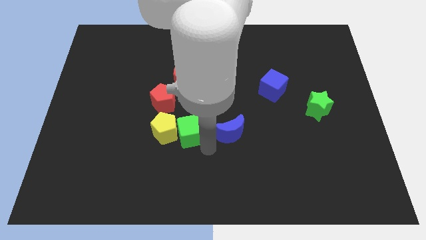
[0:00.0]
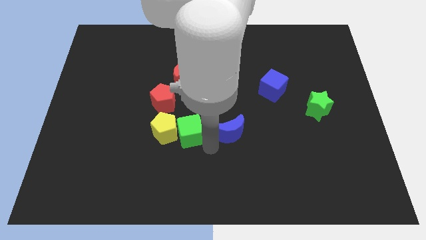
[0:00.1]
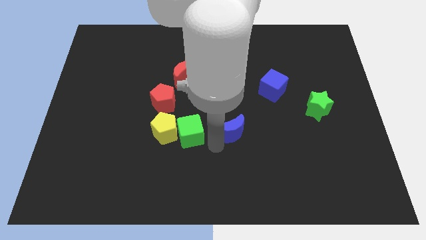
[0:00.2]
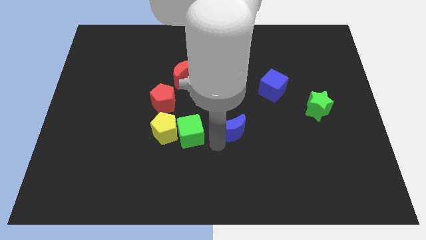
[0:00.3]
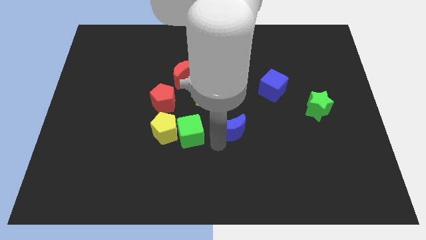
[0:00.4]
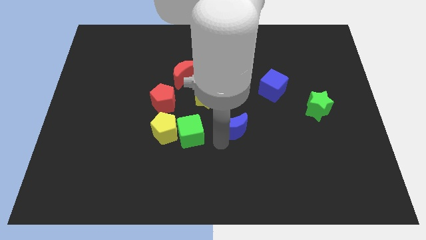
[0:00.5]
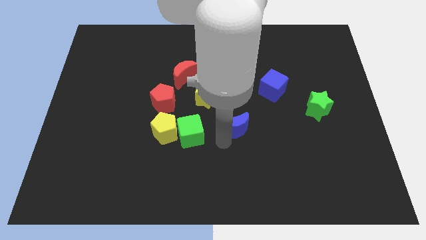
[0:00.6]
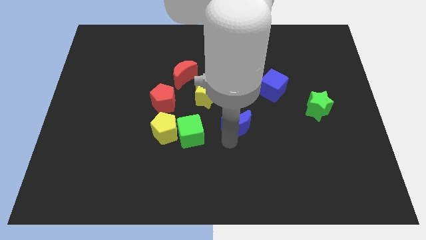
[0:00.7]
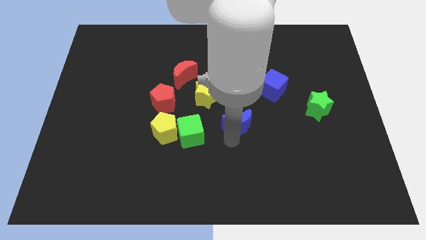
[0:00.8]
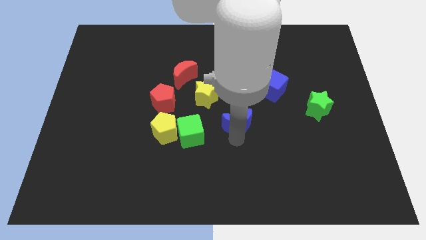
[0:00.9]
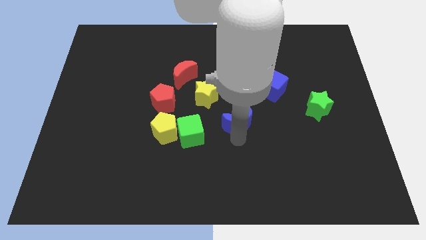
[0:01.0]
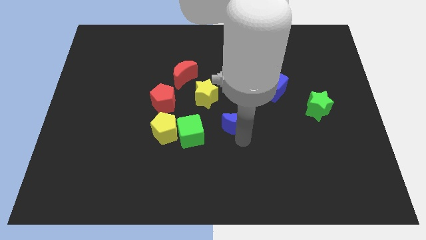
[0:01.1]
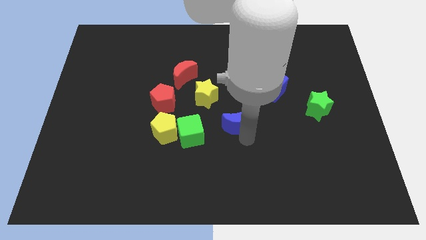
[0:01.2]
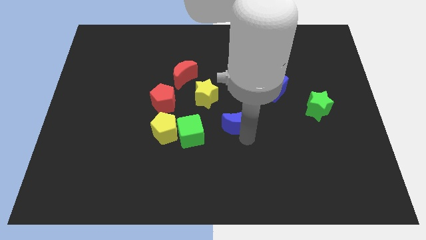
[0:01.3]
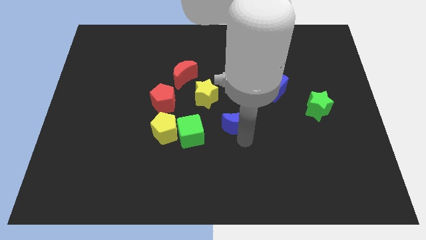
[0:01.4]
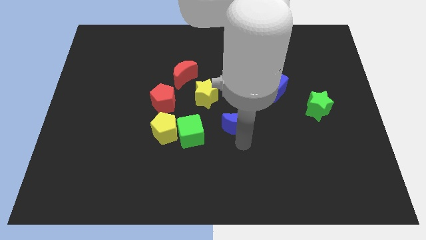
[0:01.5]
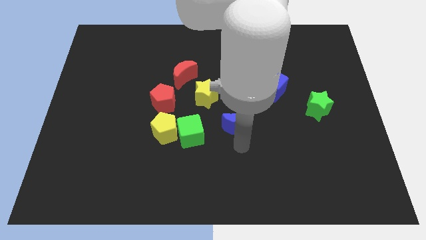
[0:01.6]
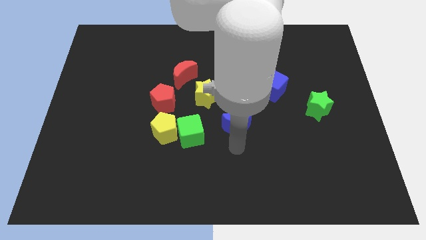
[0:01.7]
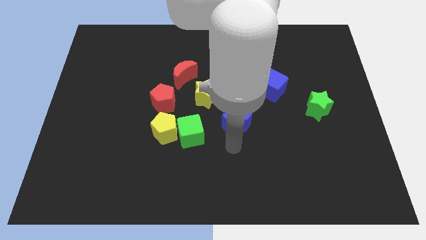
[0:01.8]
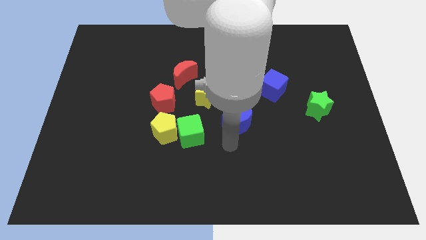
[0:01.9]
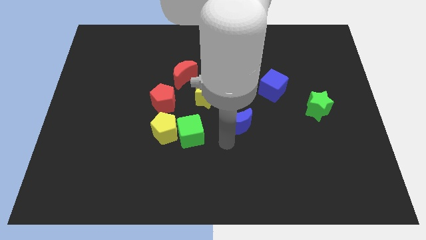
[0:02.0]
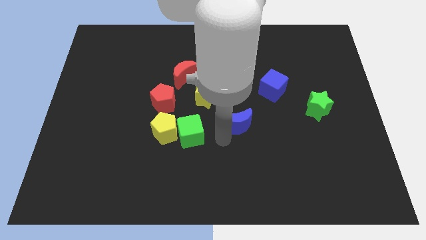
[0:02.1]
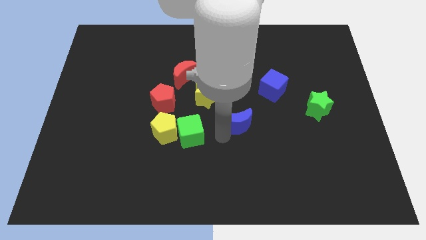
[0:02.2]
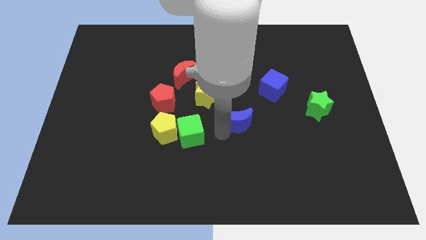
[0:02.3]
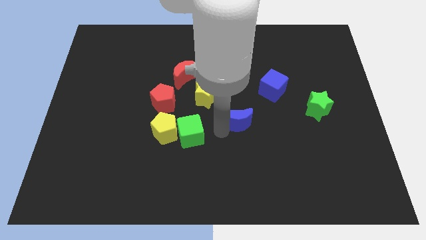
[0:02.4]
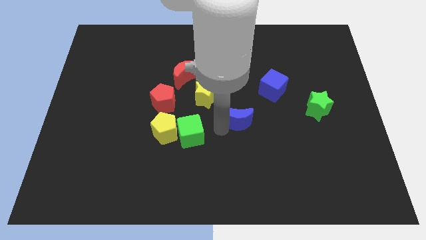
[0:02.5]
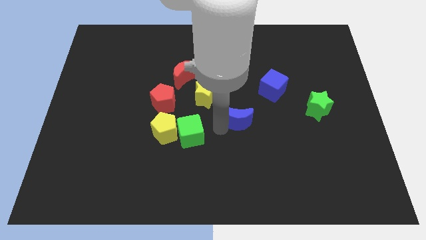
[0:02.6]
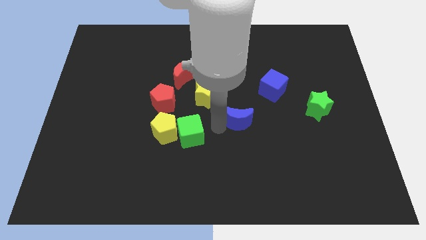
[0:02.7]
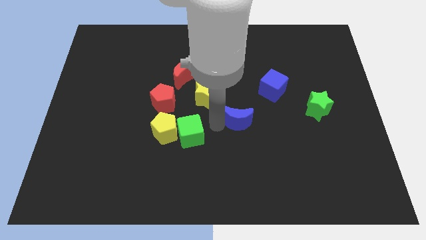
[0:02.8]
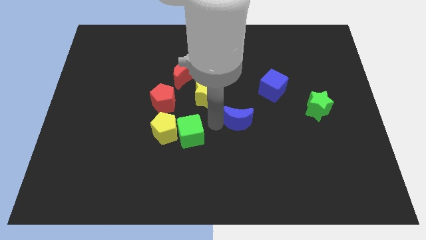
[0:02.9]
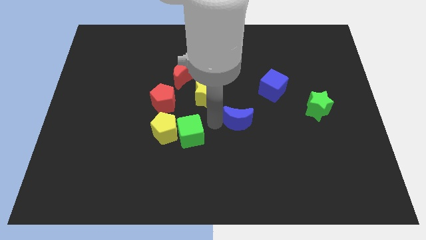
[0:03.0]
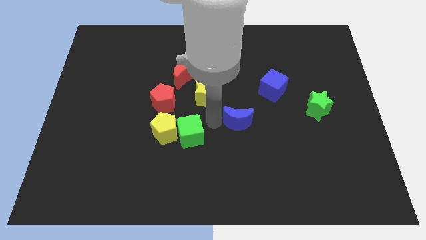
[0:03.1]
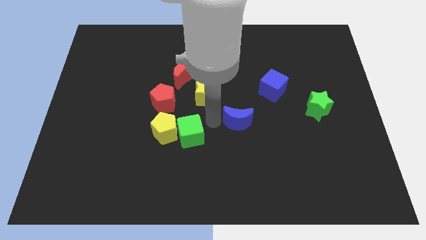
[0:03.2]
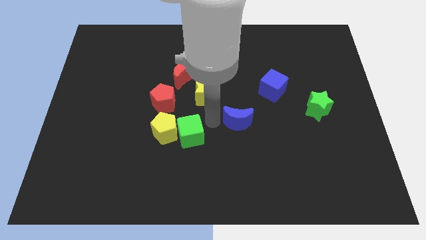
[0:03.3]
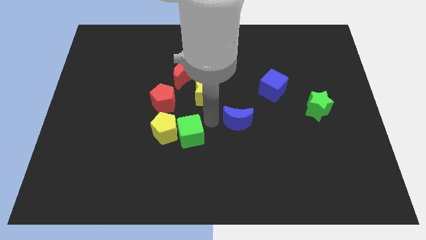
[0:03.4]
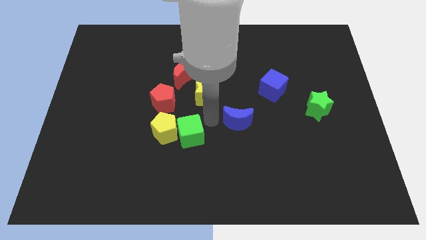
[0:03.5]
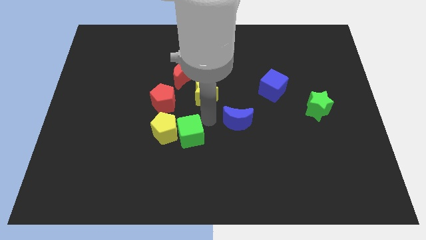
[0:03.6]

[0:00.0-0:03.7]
move blue moon right below the yellow star

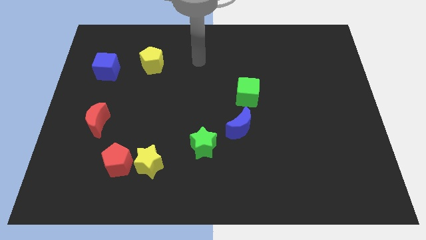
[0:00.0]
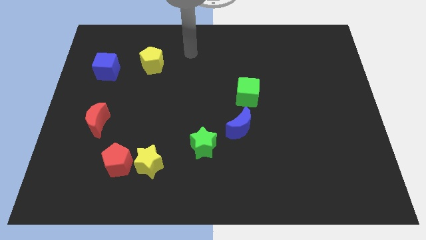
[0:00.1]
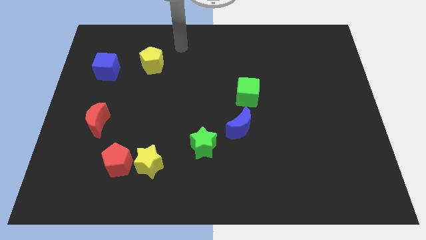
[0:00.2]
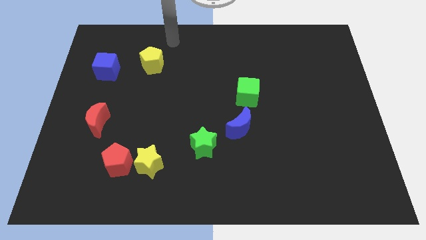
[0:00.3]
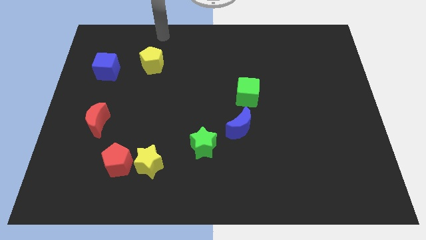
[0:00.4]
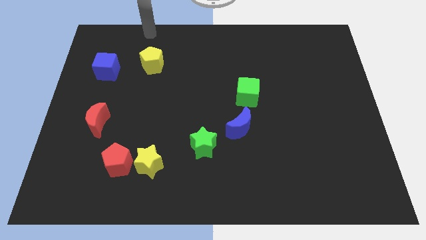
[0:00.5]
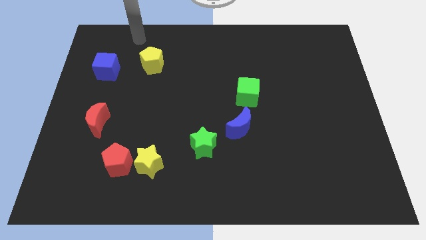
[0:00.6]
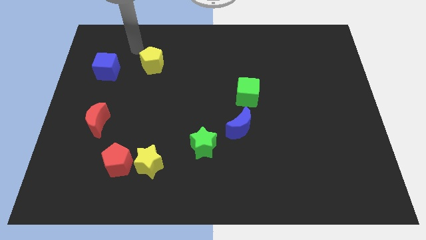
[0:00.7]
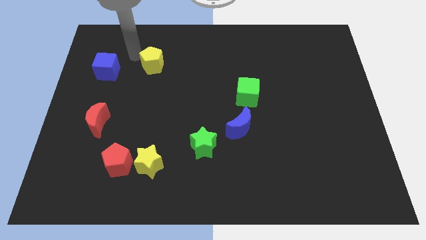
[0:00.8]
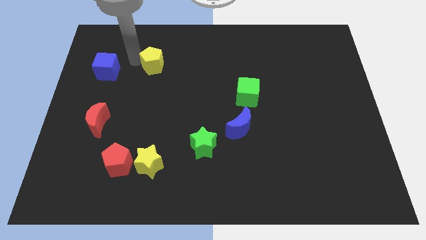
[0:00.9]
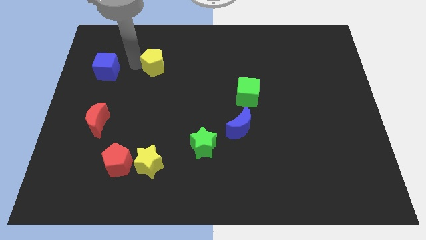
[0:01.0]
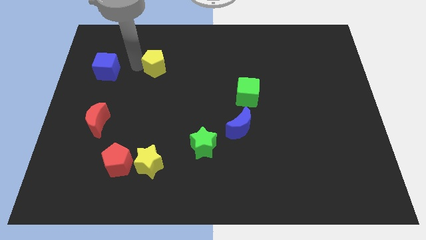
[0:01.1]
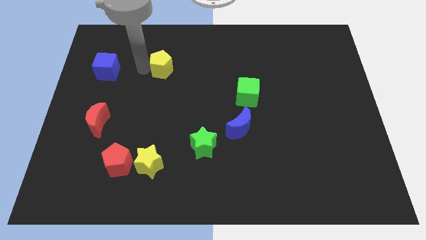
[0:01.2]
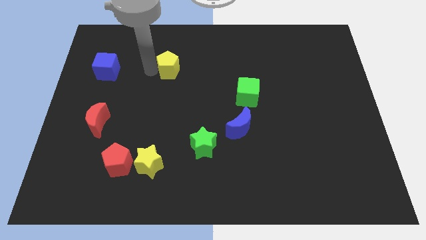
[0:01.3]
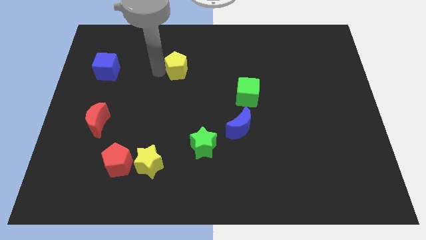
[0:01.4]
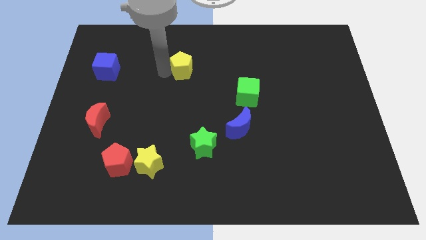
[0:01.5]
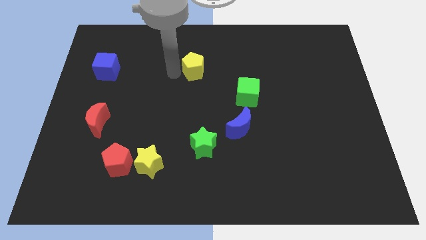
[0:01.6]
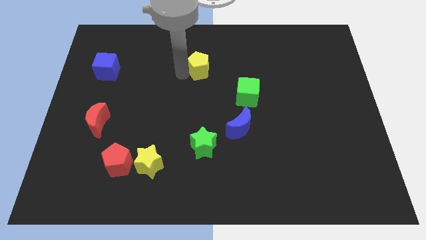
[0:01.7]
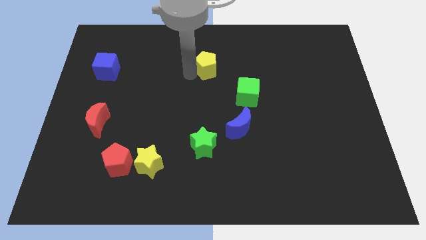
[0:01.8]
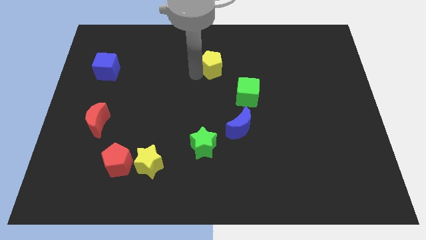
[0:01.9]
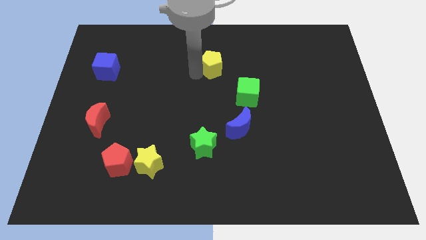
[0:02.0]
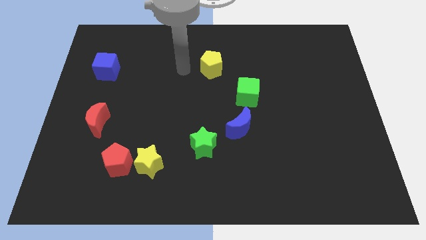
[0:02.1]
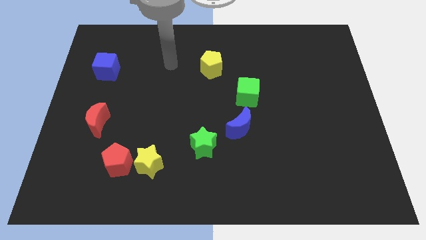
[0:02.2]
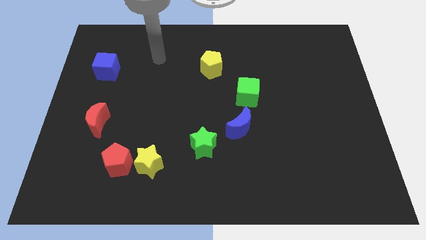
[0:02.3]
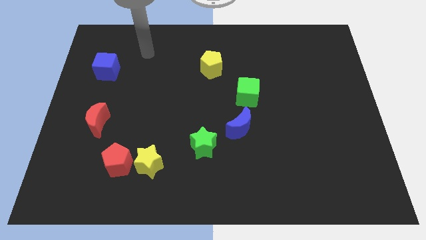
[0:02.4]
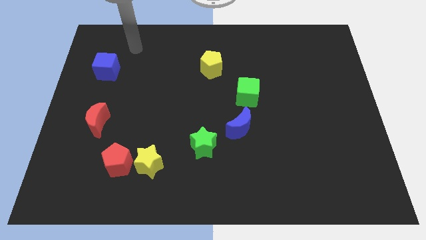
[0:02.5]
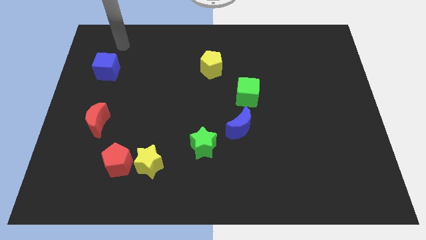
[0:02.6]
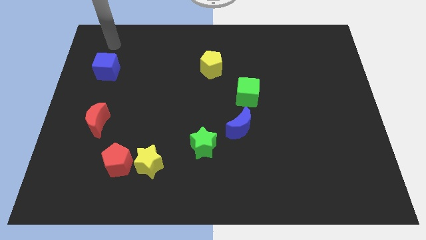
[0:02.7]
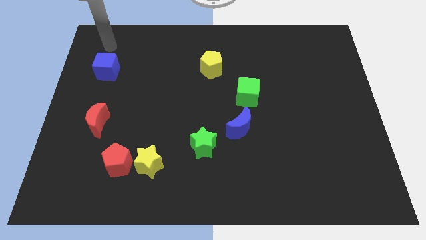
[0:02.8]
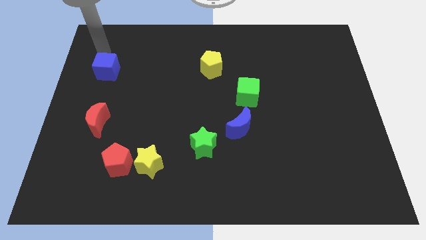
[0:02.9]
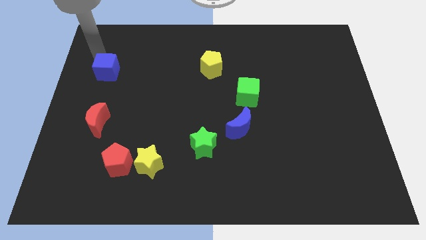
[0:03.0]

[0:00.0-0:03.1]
place the arm above the blue cube

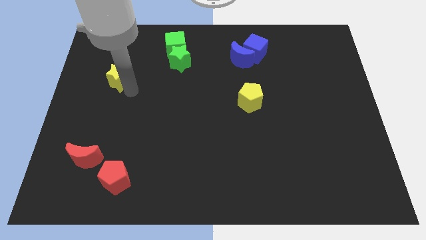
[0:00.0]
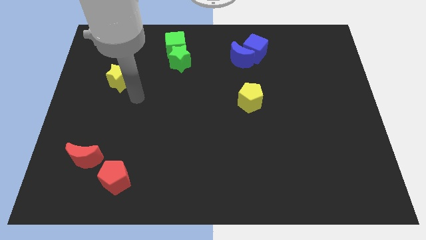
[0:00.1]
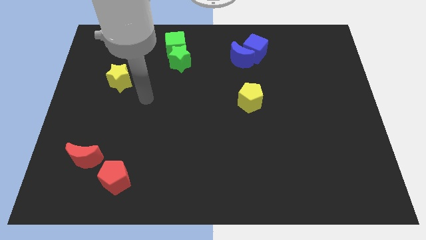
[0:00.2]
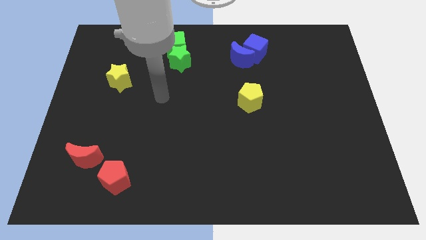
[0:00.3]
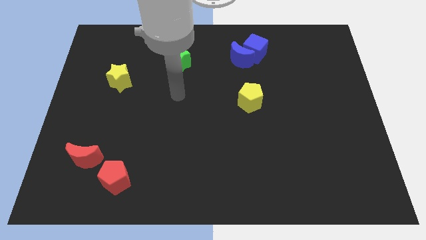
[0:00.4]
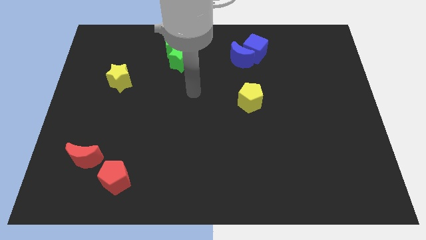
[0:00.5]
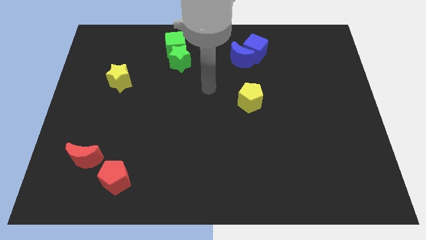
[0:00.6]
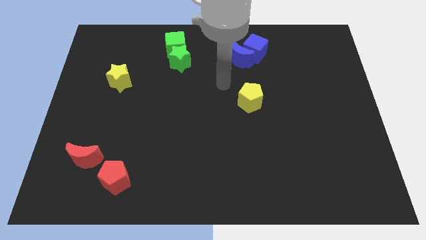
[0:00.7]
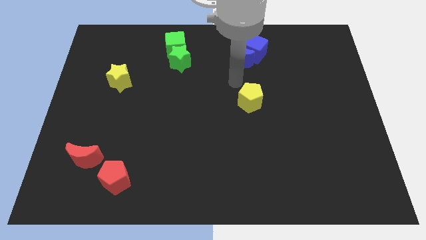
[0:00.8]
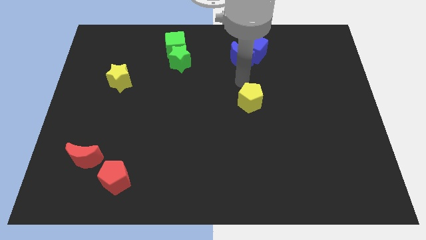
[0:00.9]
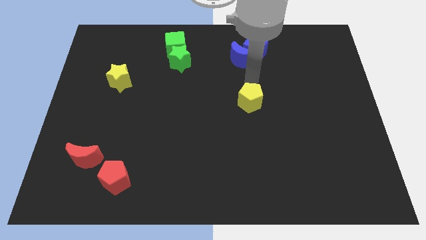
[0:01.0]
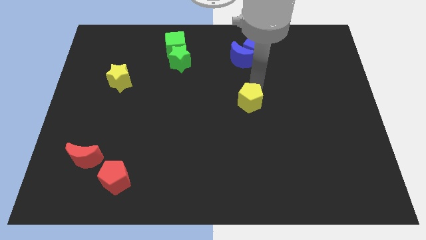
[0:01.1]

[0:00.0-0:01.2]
place your arm to the top of yellow pentagon

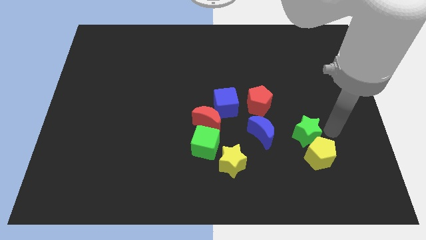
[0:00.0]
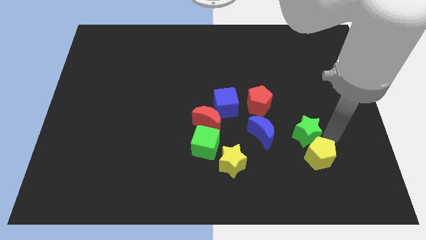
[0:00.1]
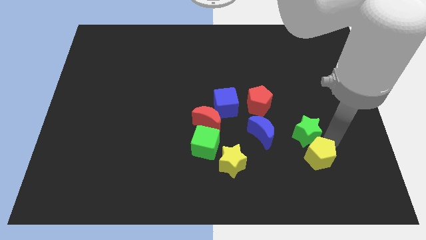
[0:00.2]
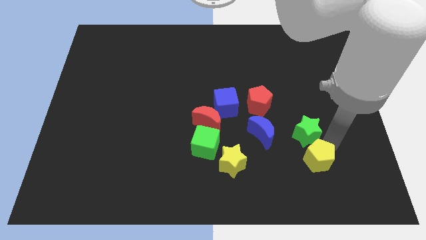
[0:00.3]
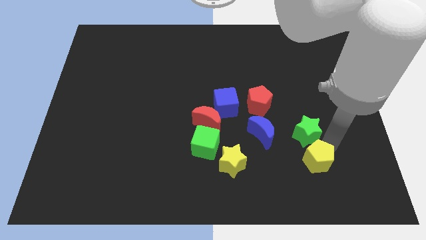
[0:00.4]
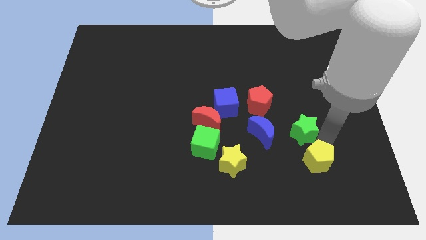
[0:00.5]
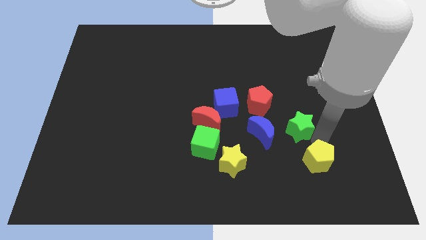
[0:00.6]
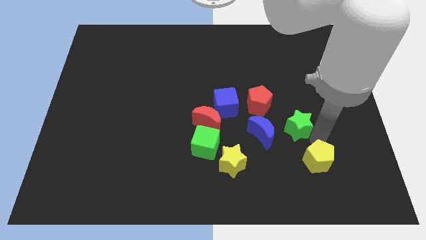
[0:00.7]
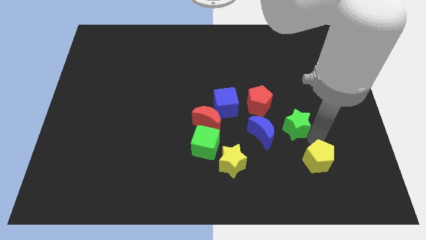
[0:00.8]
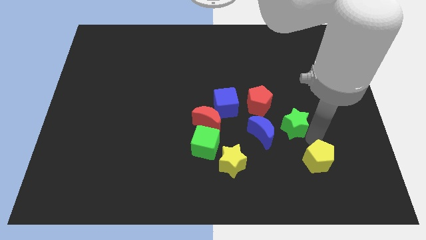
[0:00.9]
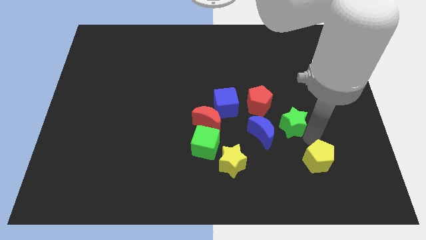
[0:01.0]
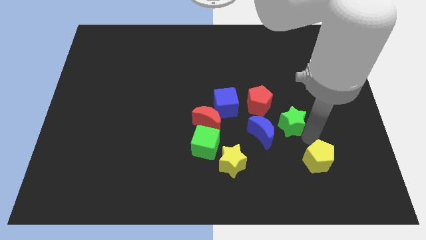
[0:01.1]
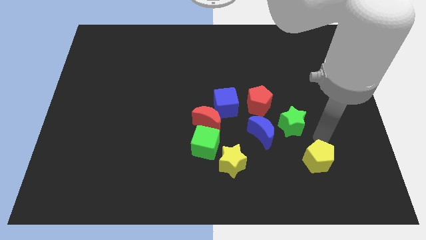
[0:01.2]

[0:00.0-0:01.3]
separate yellow pentagon from green star
